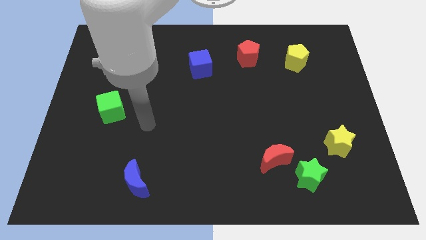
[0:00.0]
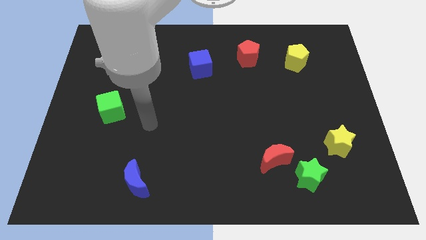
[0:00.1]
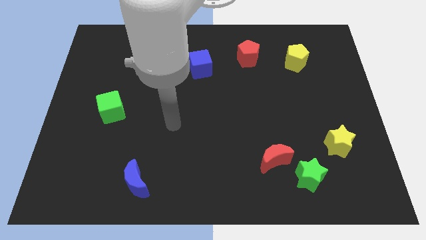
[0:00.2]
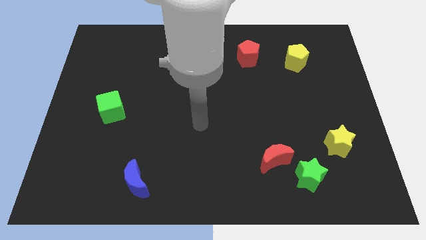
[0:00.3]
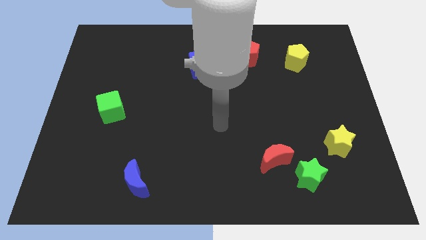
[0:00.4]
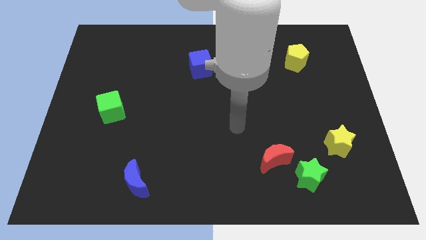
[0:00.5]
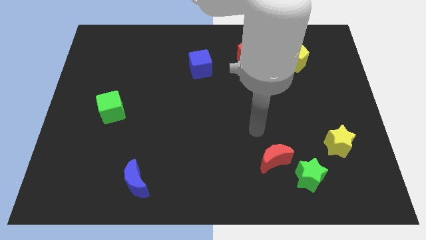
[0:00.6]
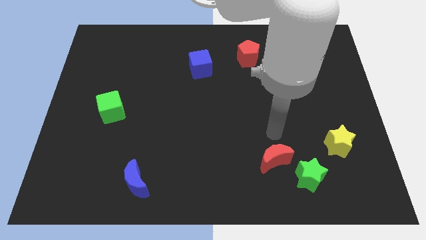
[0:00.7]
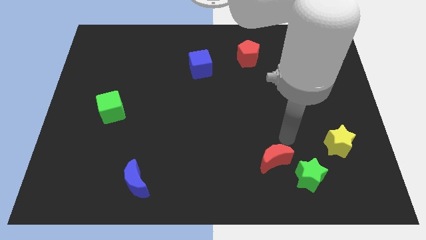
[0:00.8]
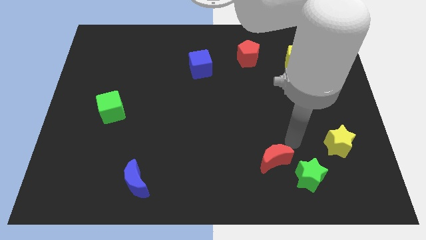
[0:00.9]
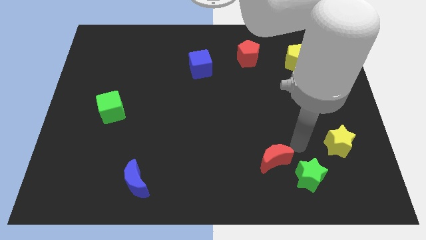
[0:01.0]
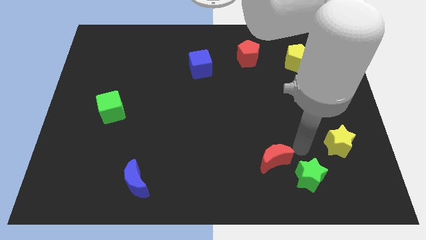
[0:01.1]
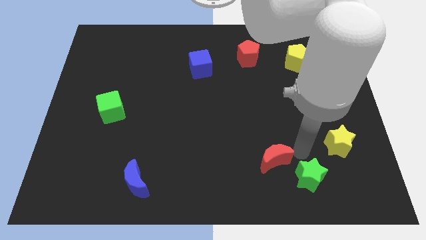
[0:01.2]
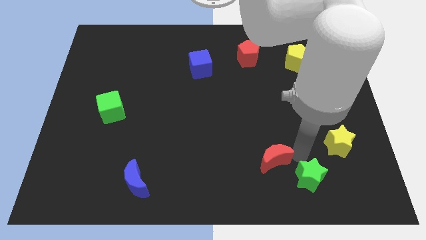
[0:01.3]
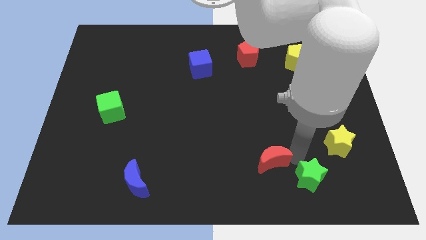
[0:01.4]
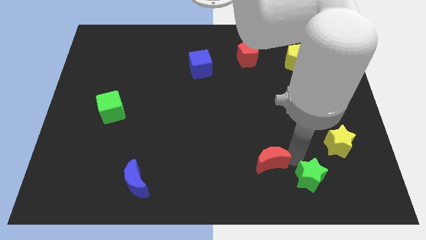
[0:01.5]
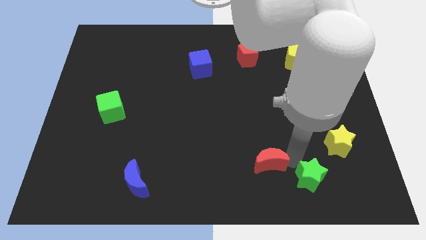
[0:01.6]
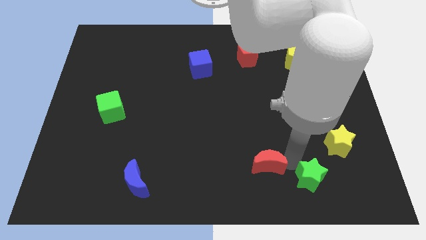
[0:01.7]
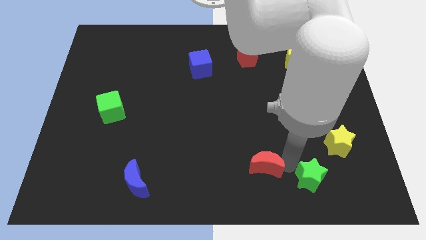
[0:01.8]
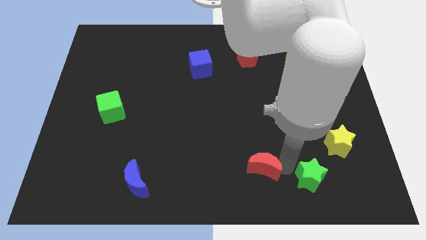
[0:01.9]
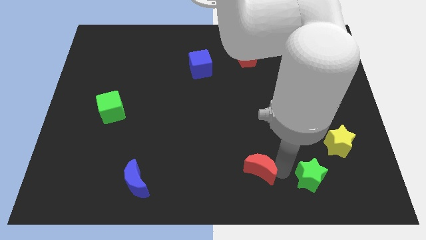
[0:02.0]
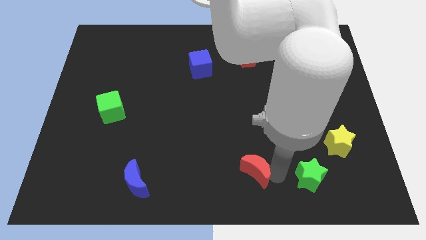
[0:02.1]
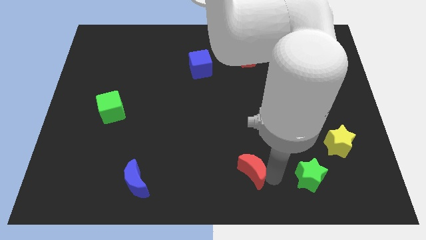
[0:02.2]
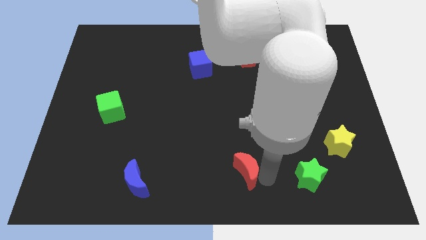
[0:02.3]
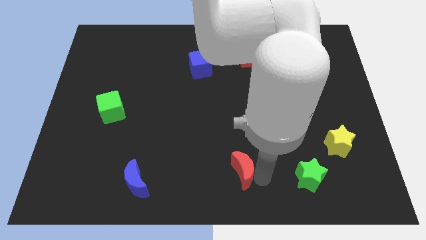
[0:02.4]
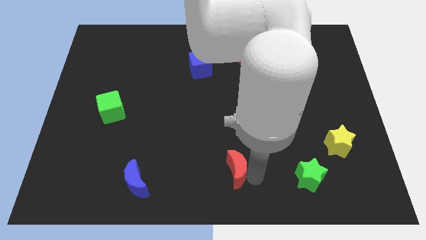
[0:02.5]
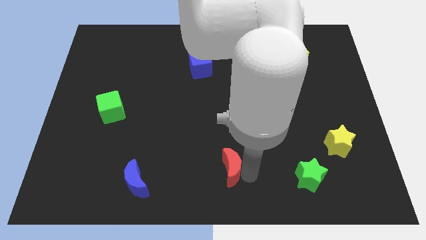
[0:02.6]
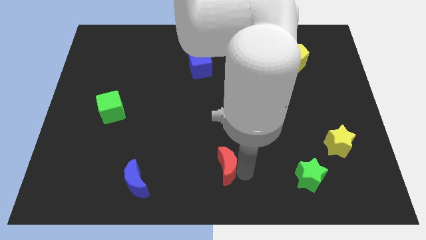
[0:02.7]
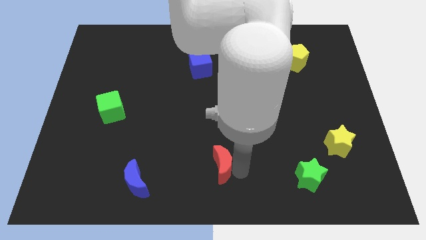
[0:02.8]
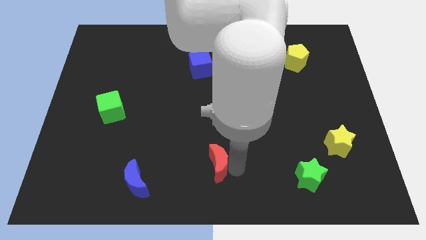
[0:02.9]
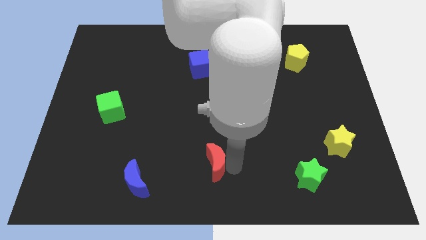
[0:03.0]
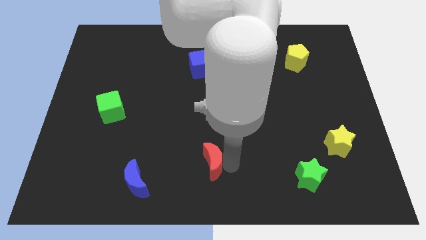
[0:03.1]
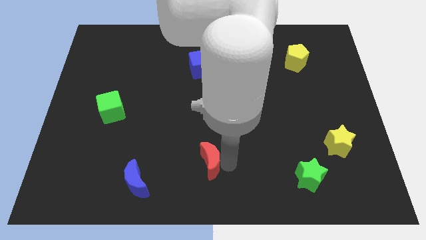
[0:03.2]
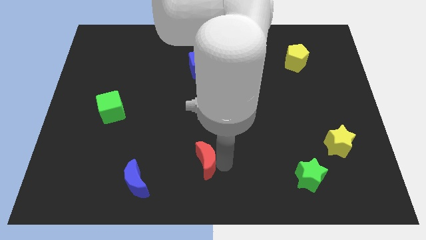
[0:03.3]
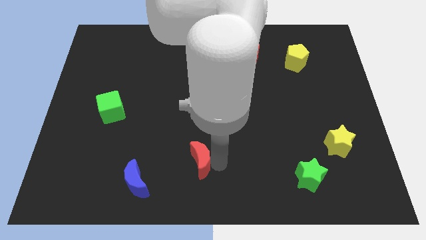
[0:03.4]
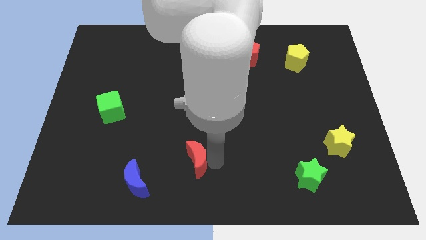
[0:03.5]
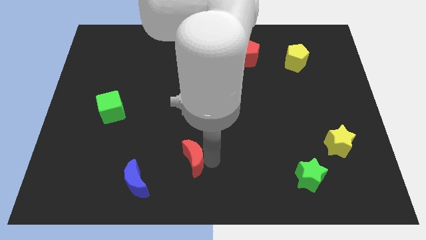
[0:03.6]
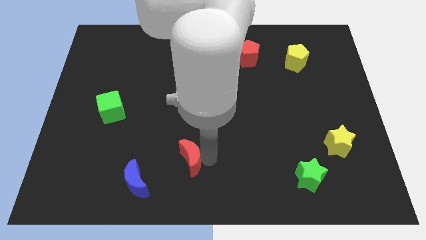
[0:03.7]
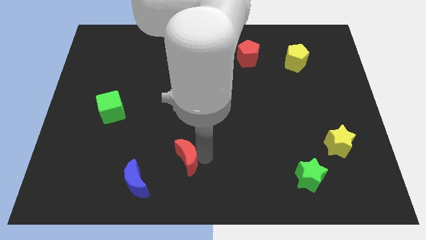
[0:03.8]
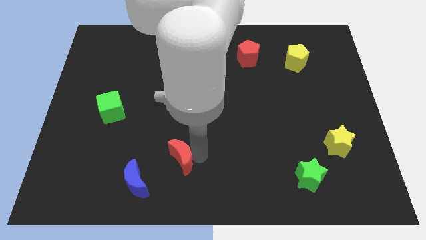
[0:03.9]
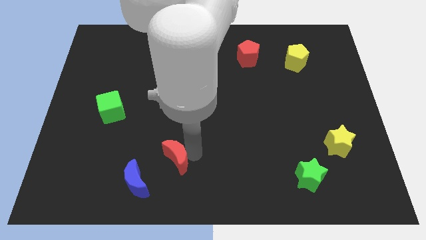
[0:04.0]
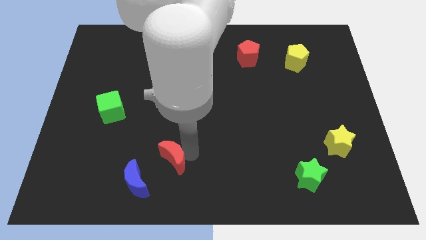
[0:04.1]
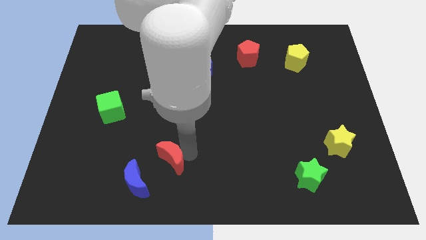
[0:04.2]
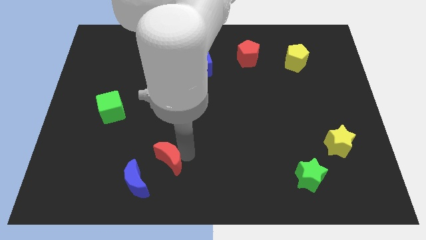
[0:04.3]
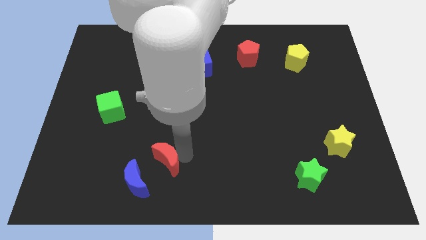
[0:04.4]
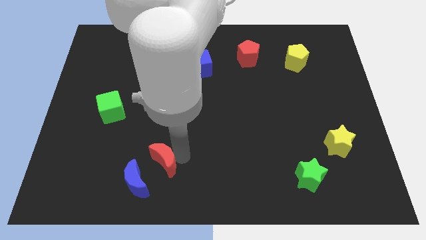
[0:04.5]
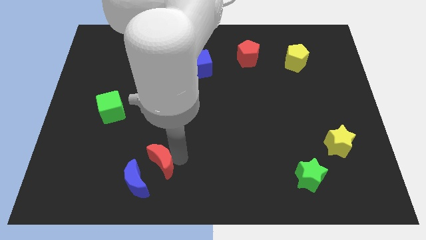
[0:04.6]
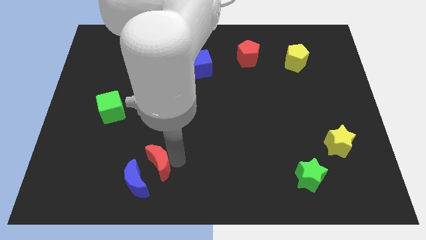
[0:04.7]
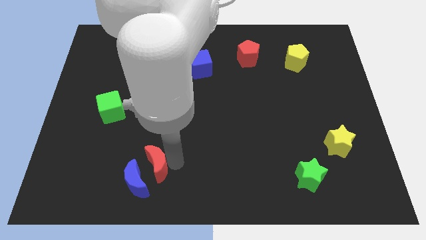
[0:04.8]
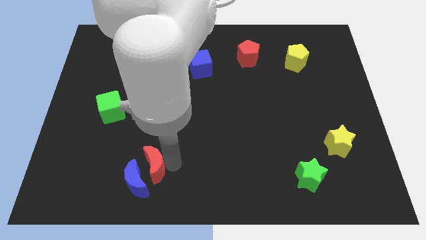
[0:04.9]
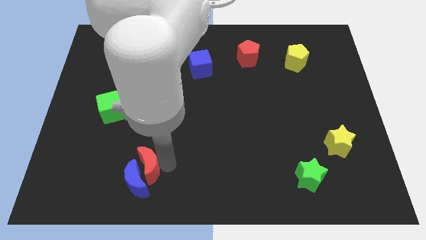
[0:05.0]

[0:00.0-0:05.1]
put the red moon next to the blue moon

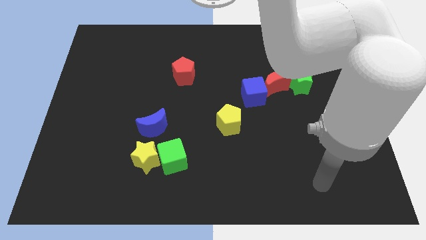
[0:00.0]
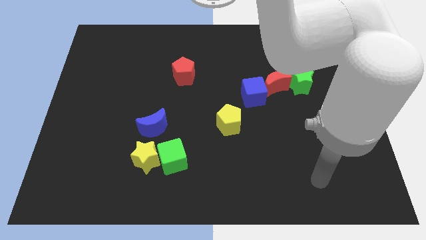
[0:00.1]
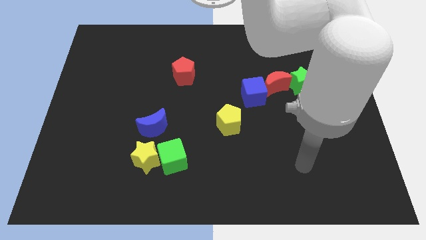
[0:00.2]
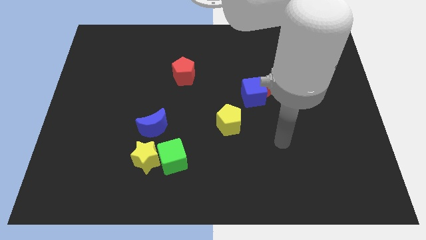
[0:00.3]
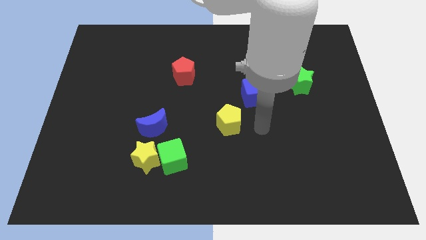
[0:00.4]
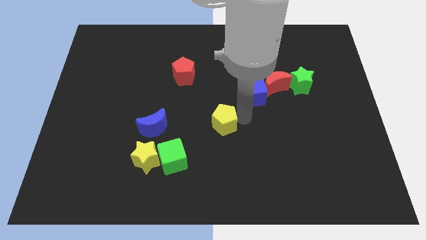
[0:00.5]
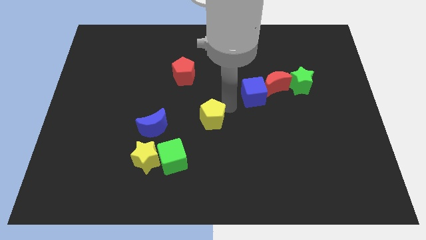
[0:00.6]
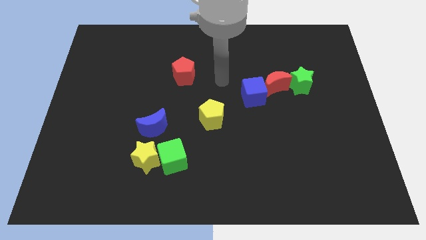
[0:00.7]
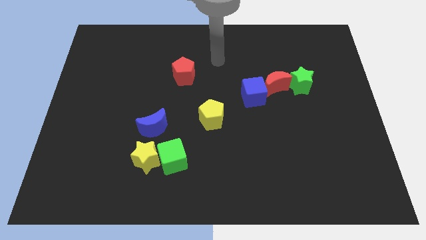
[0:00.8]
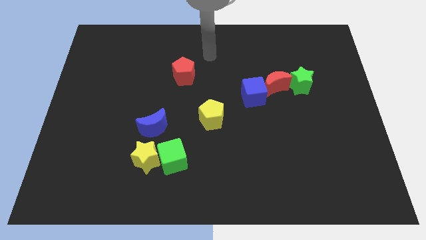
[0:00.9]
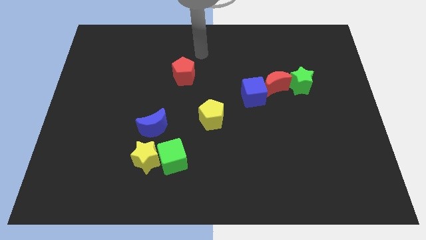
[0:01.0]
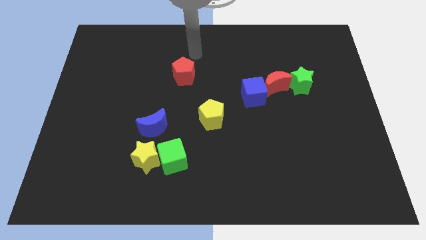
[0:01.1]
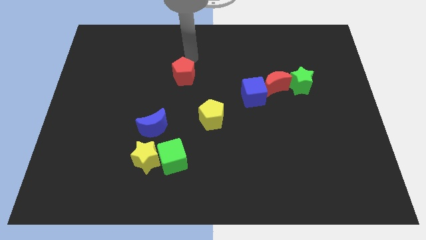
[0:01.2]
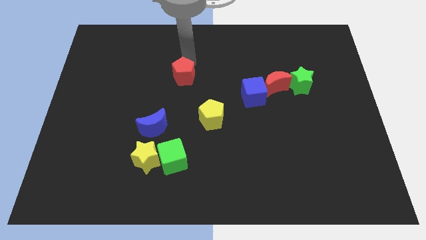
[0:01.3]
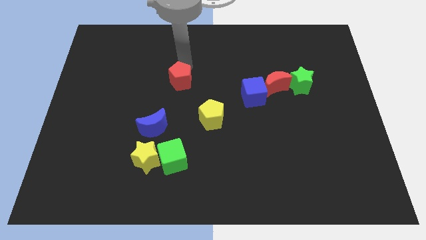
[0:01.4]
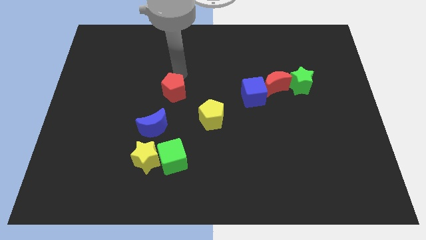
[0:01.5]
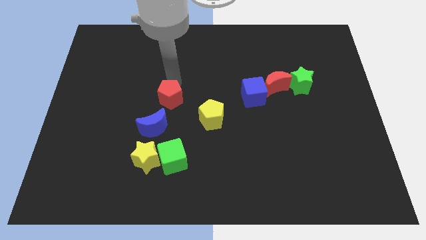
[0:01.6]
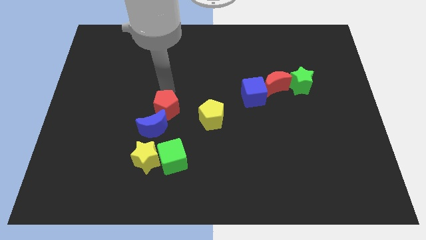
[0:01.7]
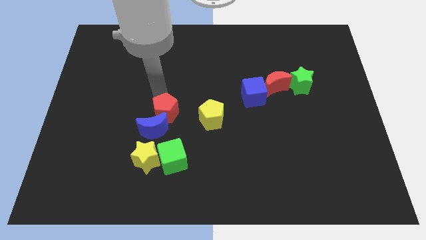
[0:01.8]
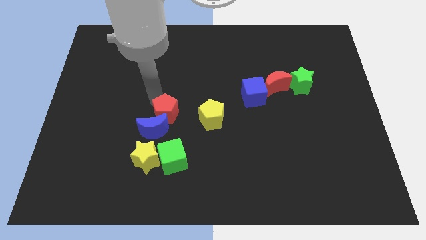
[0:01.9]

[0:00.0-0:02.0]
push the red pentagon to the blue moon

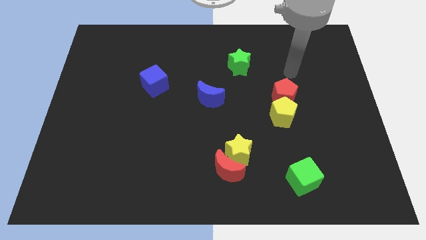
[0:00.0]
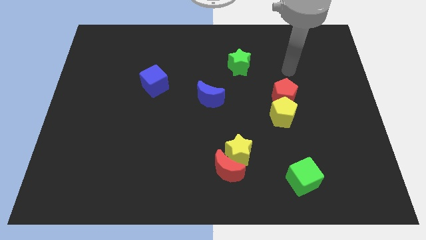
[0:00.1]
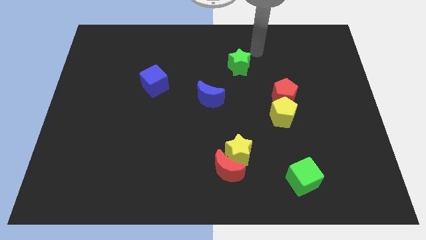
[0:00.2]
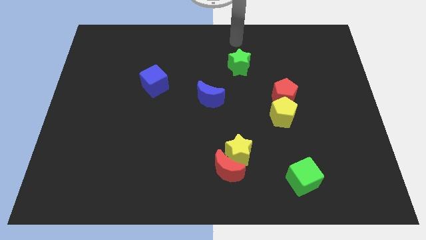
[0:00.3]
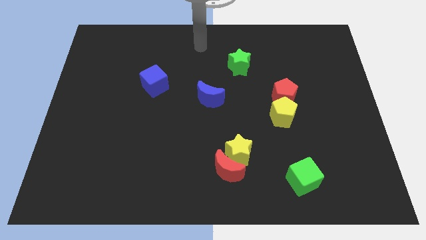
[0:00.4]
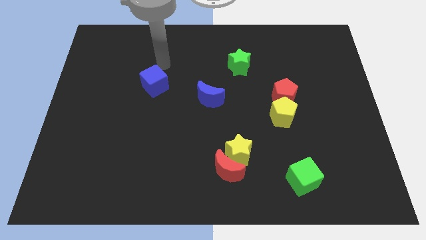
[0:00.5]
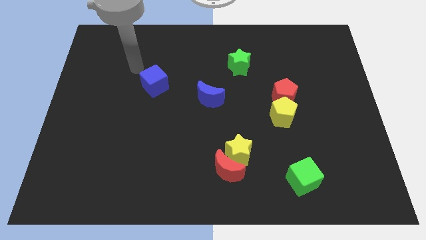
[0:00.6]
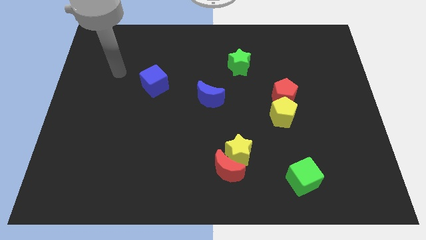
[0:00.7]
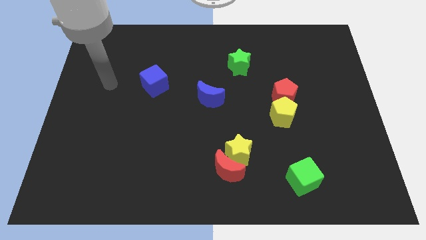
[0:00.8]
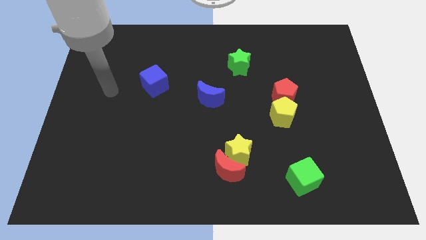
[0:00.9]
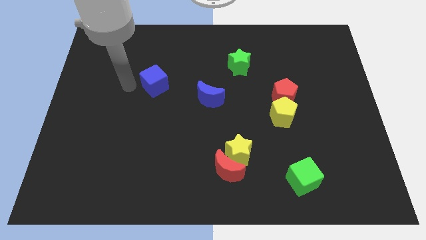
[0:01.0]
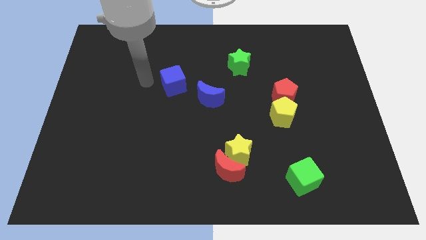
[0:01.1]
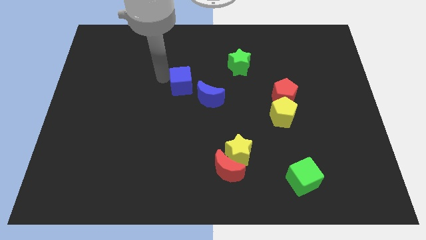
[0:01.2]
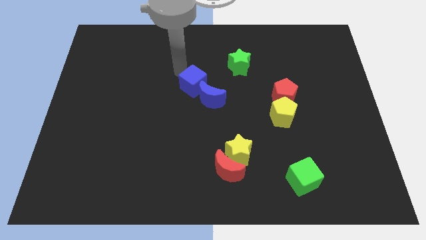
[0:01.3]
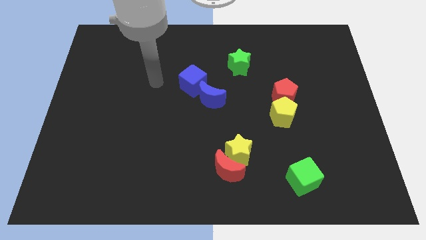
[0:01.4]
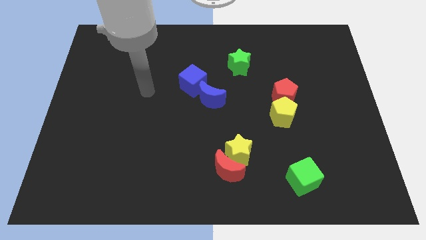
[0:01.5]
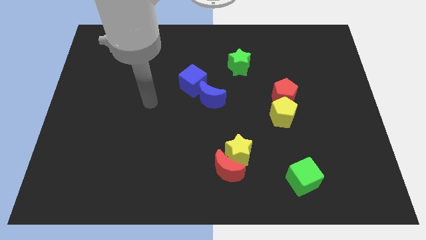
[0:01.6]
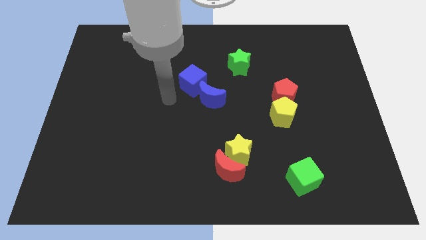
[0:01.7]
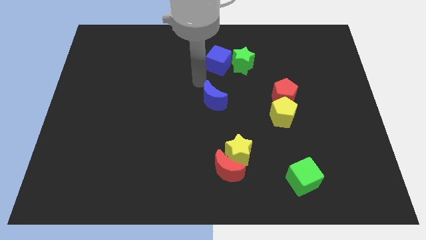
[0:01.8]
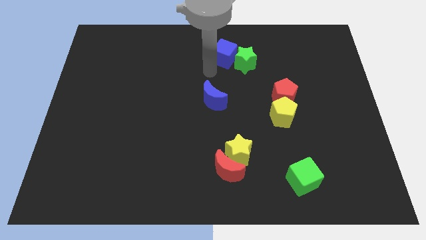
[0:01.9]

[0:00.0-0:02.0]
move the blue cube to the green star
